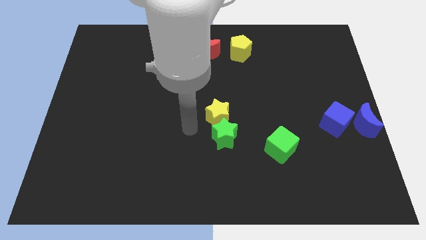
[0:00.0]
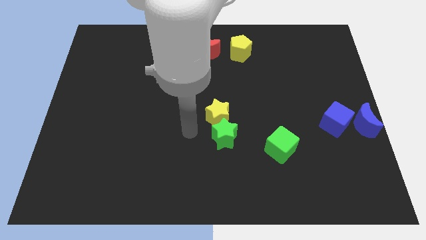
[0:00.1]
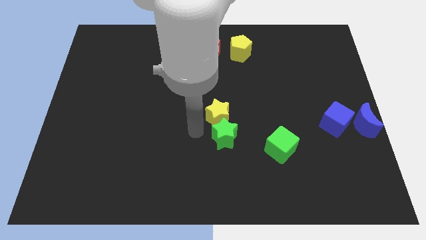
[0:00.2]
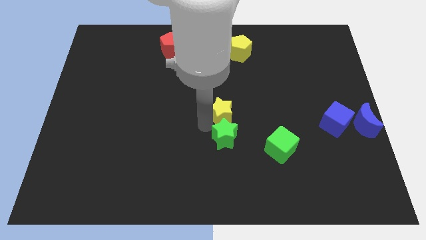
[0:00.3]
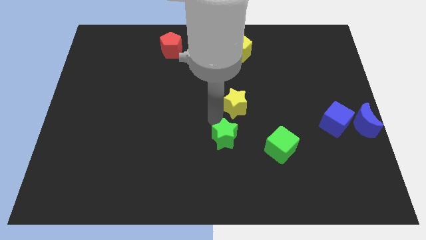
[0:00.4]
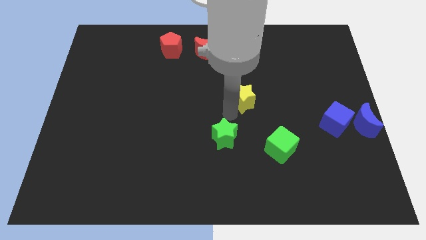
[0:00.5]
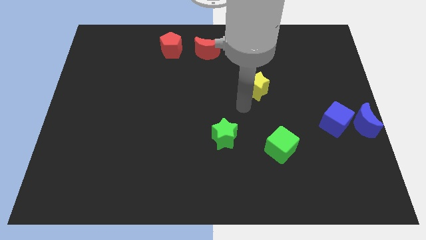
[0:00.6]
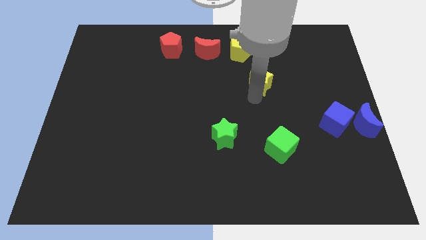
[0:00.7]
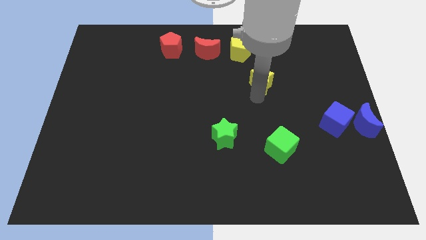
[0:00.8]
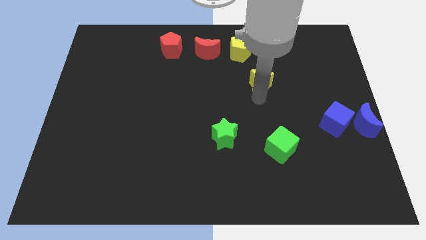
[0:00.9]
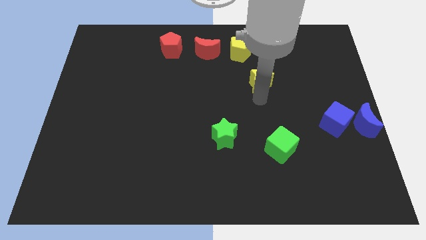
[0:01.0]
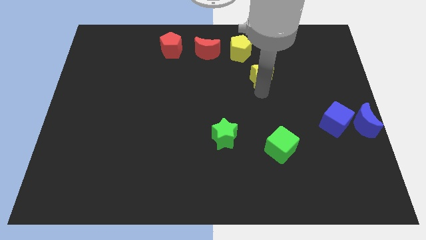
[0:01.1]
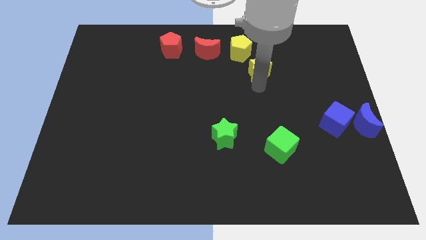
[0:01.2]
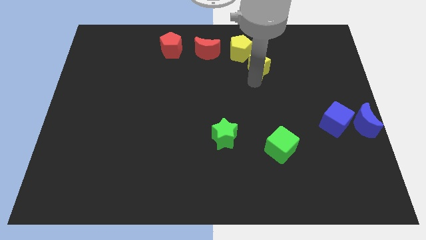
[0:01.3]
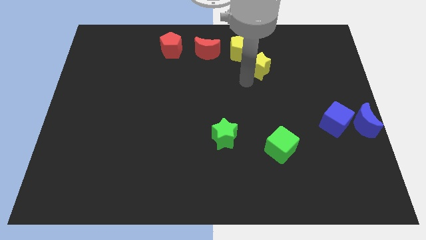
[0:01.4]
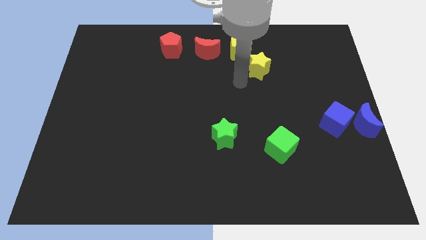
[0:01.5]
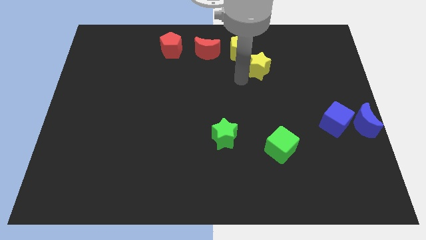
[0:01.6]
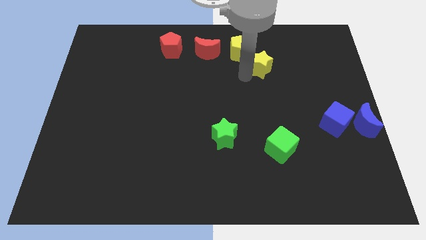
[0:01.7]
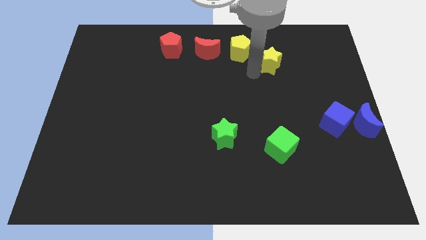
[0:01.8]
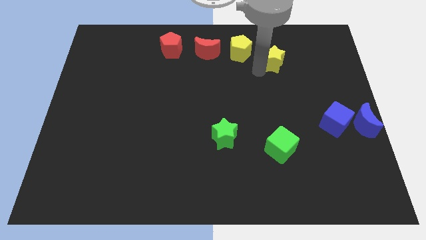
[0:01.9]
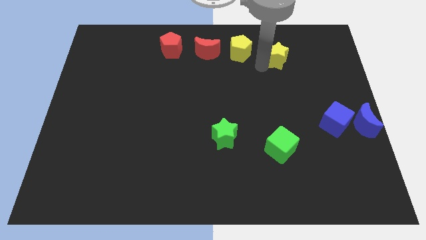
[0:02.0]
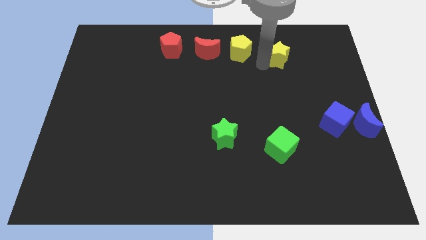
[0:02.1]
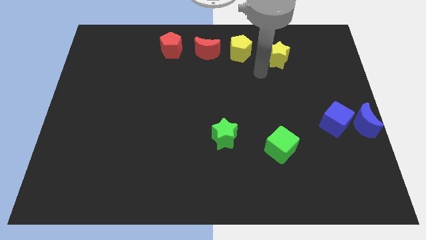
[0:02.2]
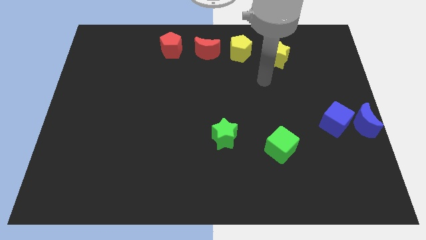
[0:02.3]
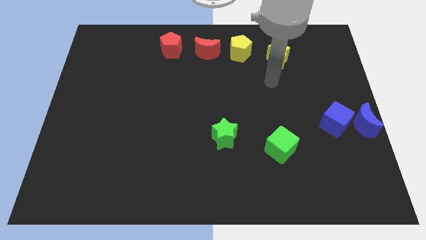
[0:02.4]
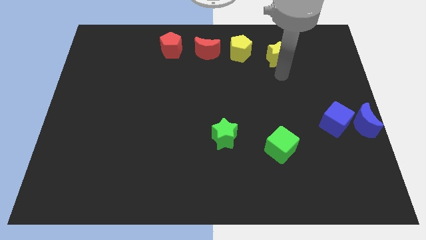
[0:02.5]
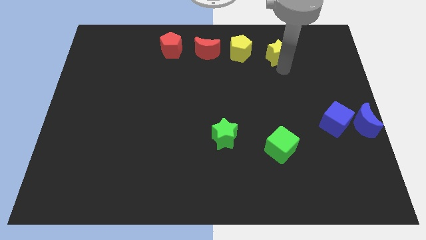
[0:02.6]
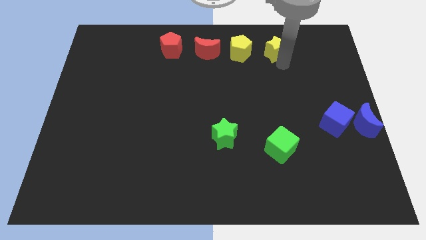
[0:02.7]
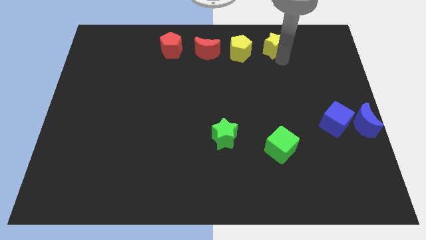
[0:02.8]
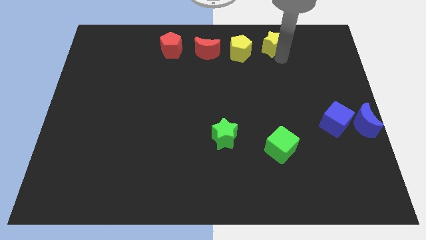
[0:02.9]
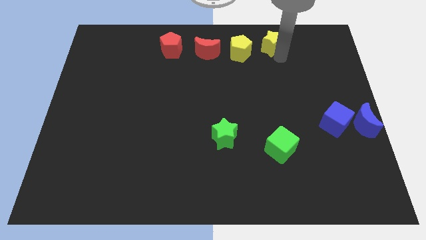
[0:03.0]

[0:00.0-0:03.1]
move the yellow star away from the green star

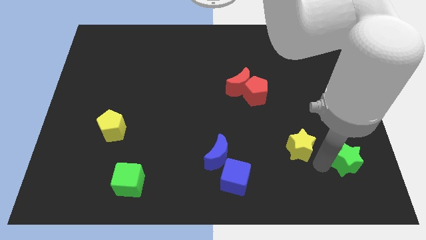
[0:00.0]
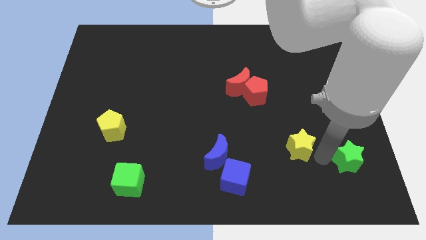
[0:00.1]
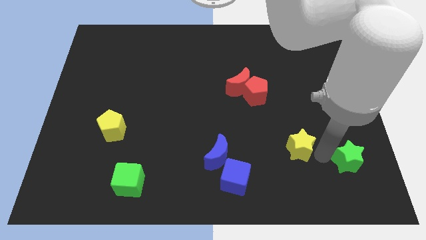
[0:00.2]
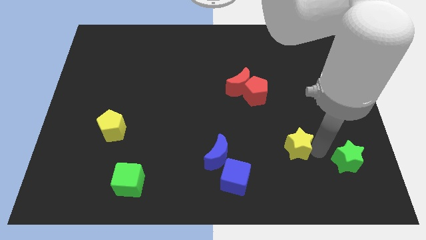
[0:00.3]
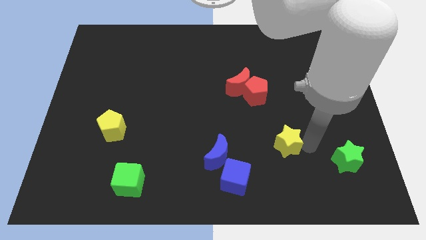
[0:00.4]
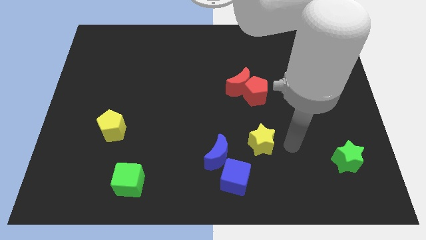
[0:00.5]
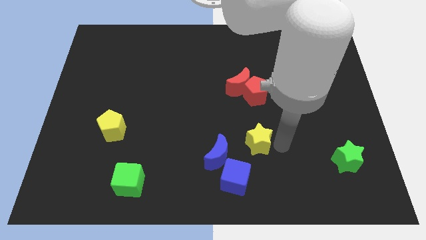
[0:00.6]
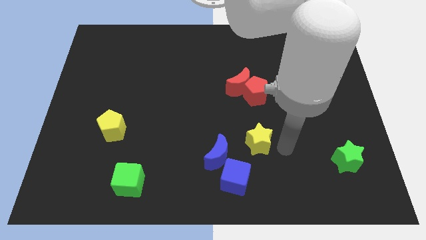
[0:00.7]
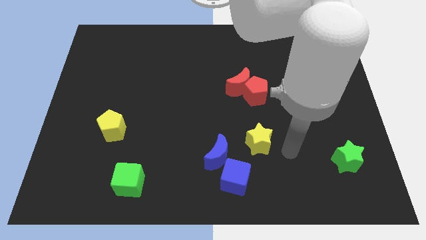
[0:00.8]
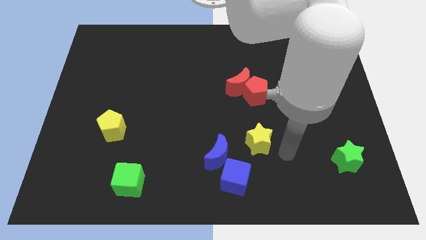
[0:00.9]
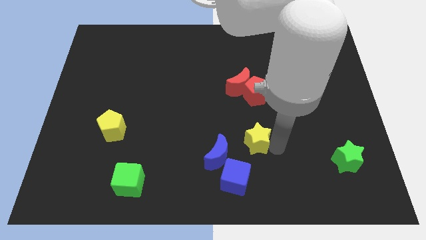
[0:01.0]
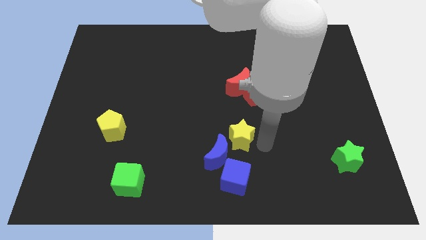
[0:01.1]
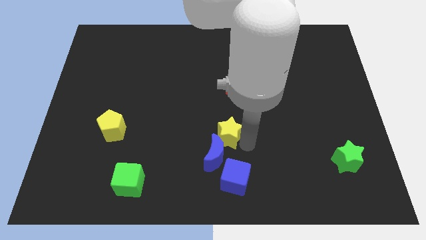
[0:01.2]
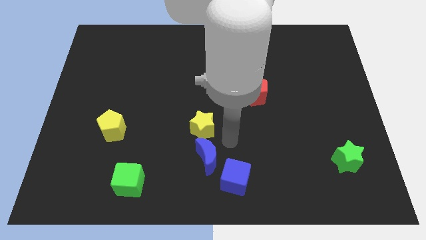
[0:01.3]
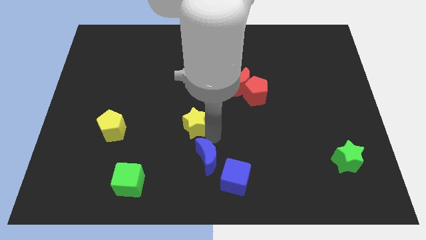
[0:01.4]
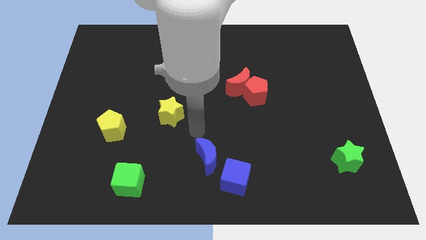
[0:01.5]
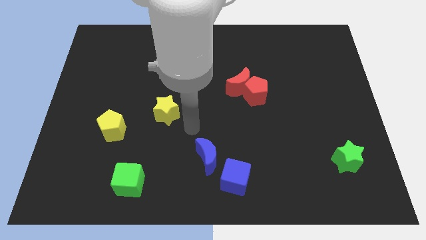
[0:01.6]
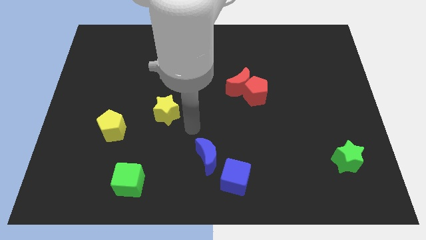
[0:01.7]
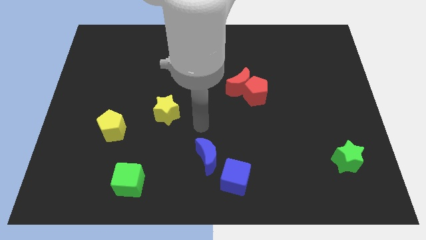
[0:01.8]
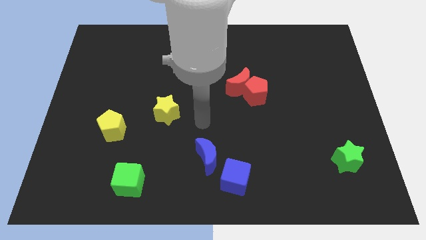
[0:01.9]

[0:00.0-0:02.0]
move the yellow star diagonal right of the yellow pentagon

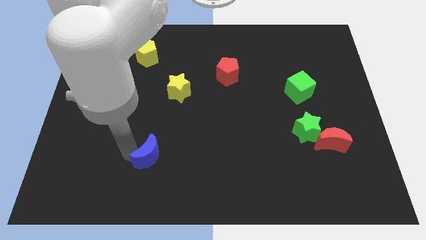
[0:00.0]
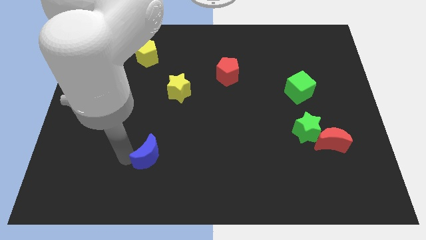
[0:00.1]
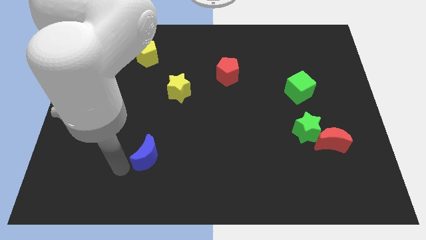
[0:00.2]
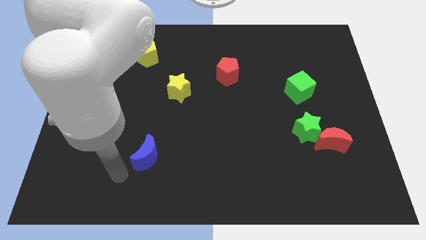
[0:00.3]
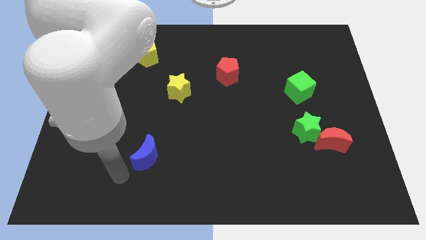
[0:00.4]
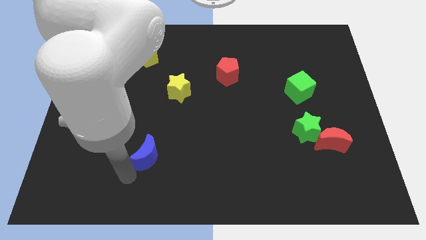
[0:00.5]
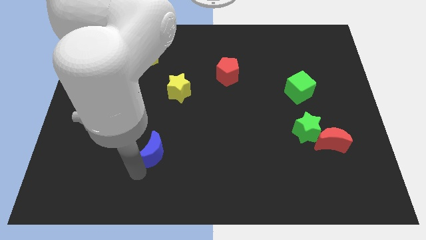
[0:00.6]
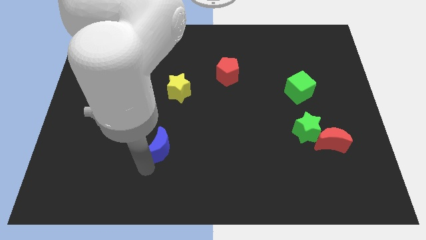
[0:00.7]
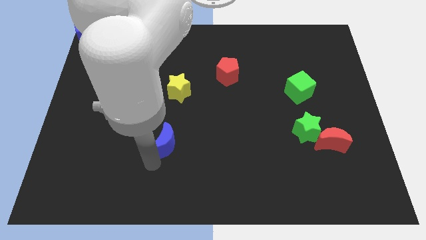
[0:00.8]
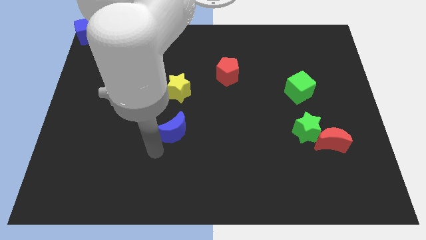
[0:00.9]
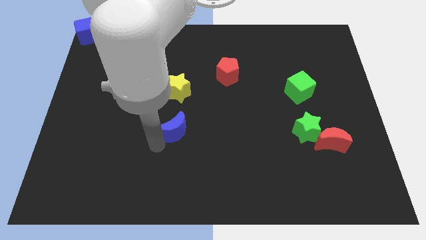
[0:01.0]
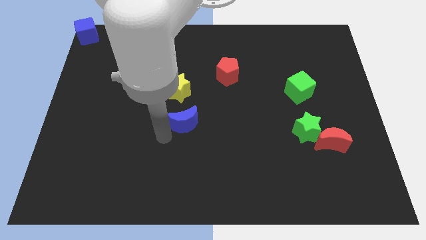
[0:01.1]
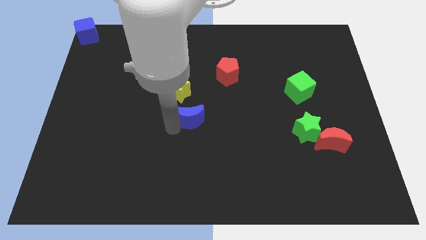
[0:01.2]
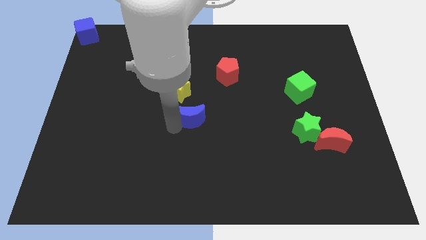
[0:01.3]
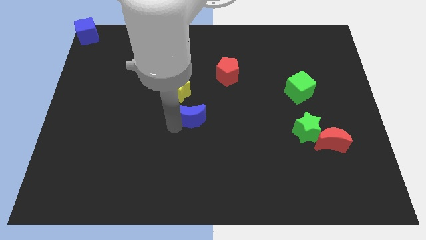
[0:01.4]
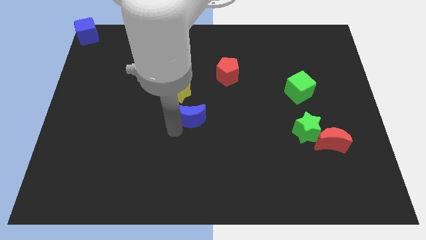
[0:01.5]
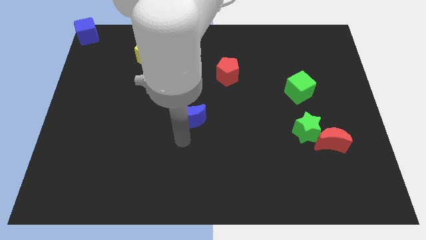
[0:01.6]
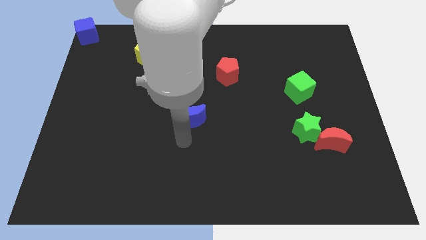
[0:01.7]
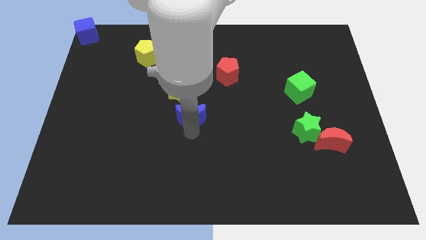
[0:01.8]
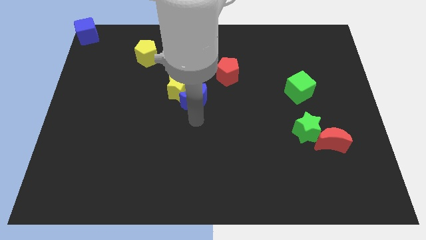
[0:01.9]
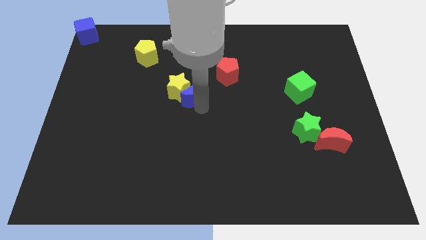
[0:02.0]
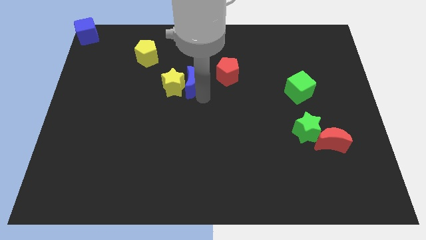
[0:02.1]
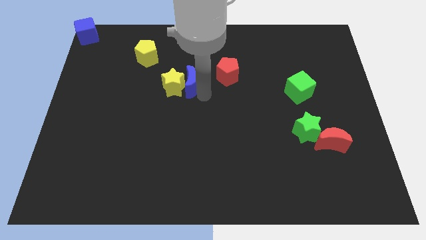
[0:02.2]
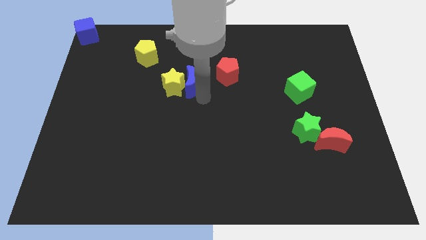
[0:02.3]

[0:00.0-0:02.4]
move the blue crescent close to the yellow star

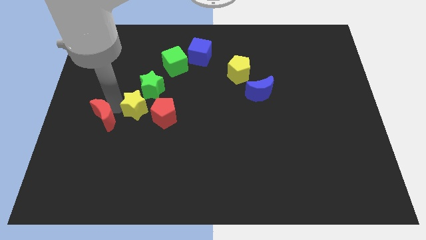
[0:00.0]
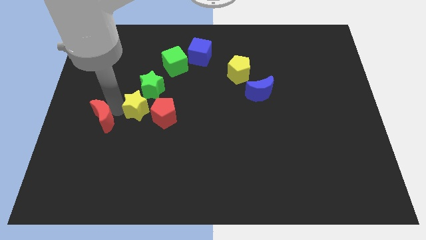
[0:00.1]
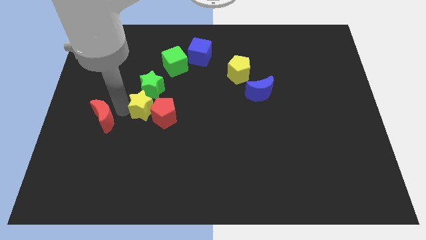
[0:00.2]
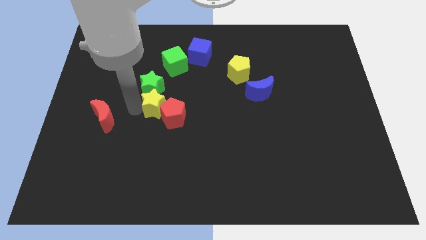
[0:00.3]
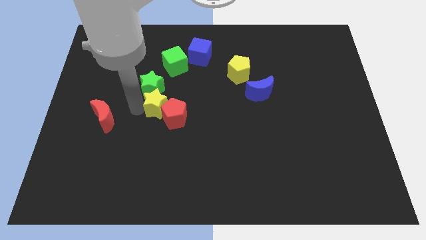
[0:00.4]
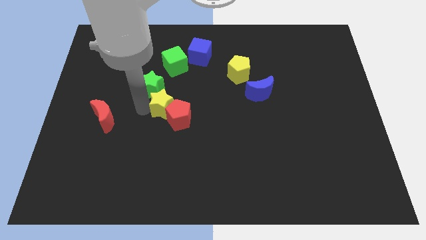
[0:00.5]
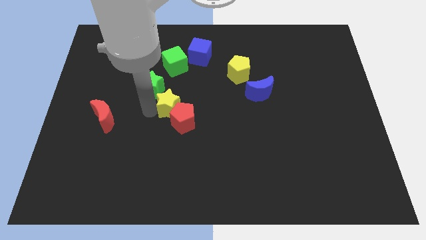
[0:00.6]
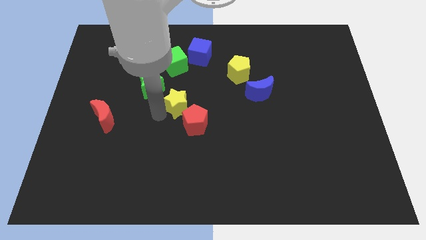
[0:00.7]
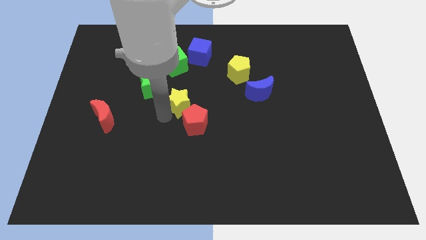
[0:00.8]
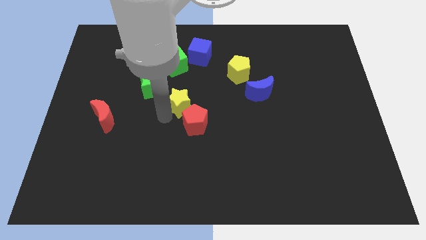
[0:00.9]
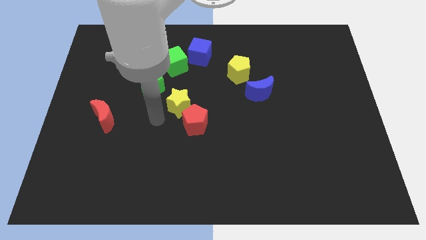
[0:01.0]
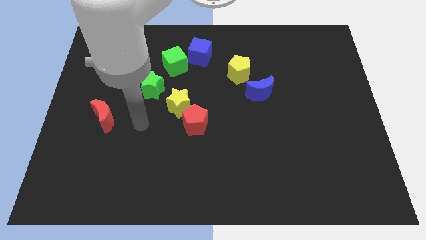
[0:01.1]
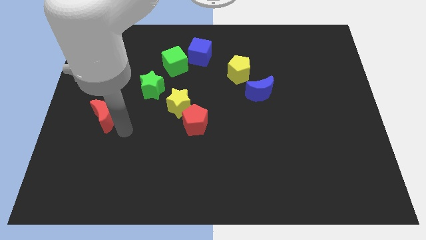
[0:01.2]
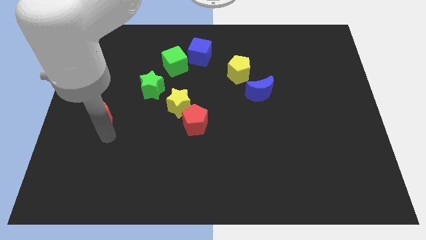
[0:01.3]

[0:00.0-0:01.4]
push the yellow star diagonal to the red pentagon
